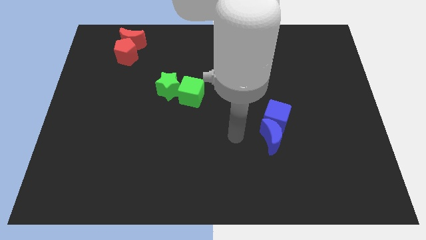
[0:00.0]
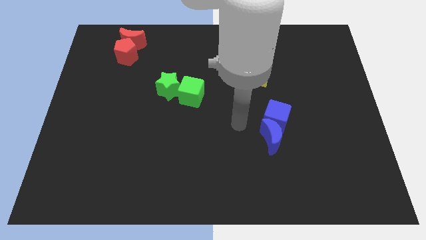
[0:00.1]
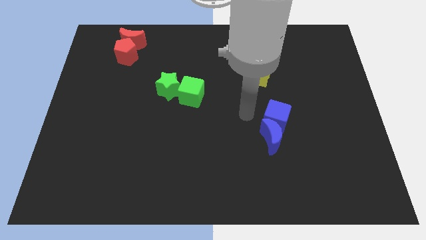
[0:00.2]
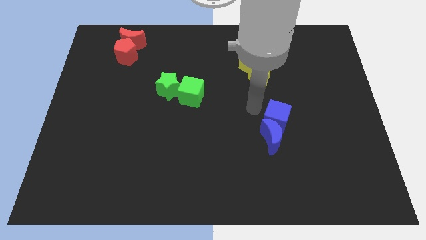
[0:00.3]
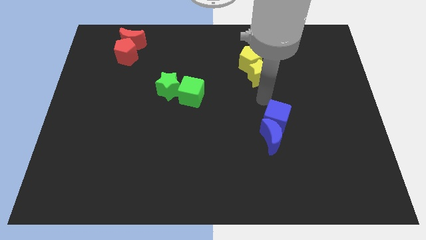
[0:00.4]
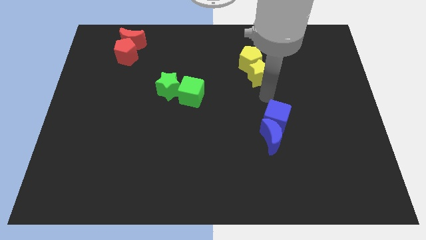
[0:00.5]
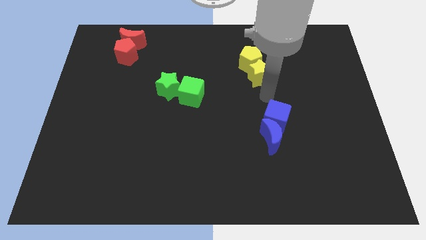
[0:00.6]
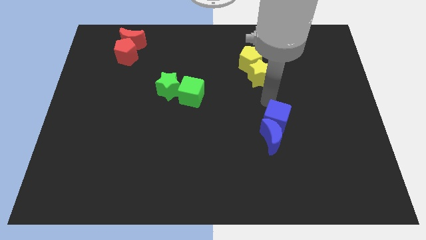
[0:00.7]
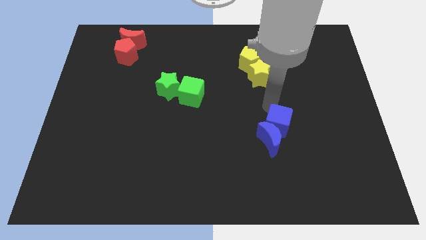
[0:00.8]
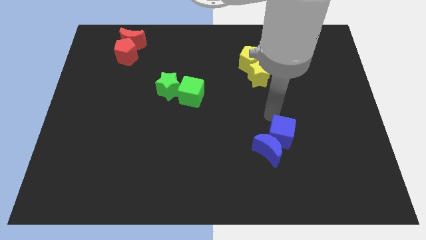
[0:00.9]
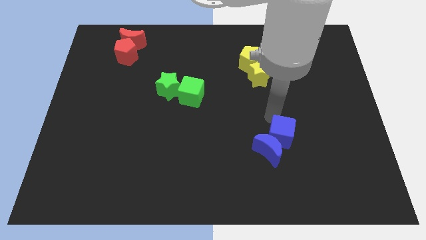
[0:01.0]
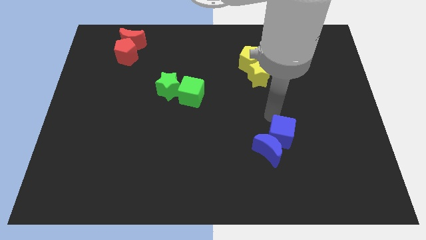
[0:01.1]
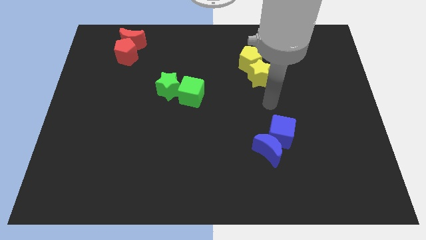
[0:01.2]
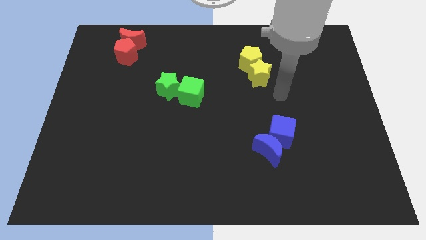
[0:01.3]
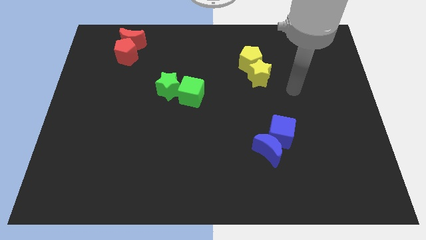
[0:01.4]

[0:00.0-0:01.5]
move the blue blocks towards the bottom

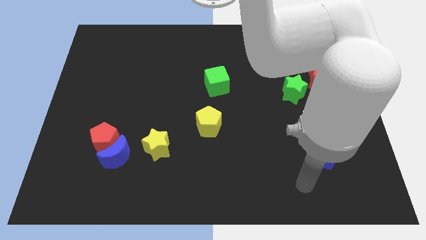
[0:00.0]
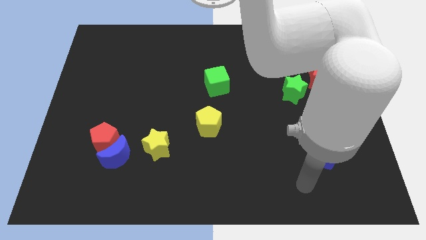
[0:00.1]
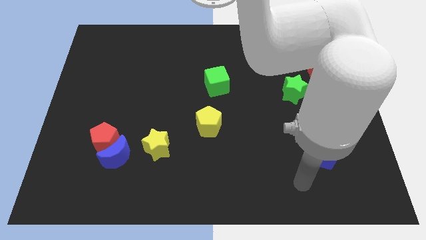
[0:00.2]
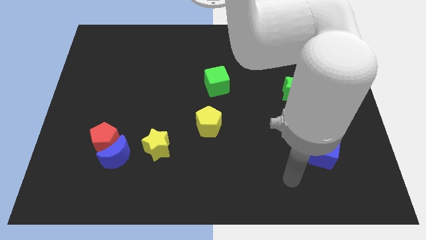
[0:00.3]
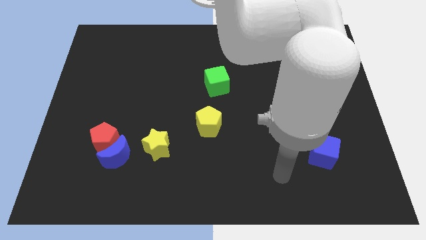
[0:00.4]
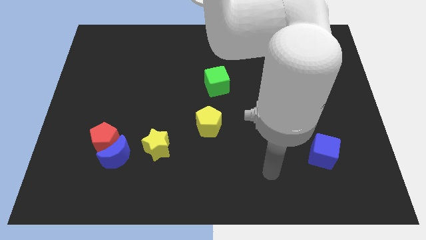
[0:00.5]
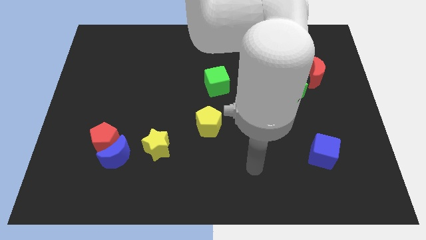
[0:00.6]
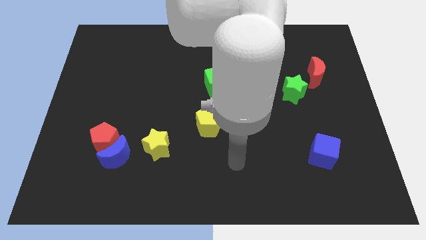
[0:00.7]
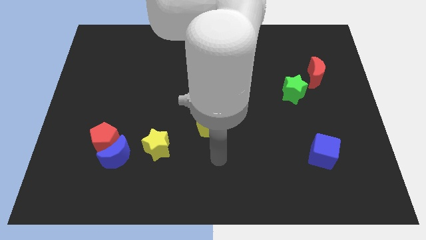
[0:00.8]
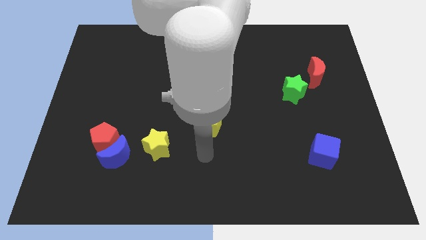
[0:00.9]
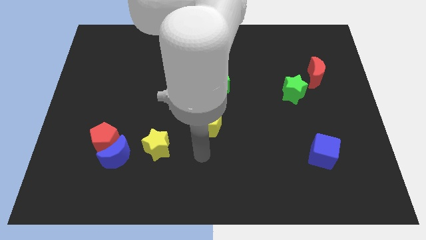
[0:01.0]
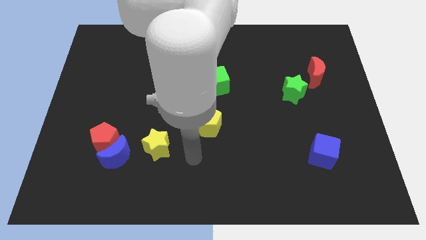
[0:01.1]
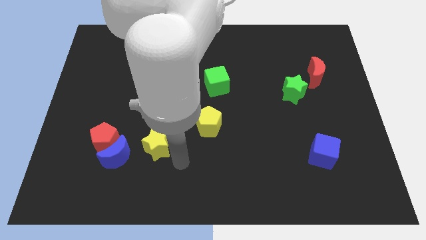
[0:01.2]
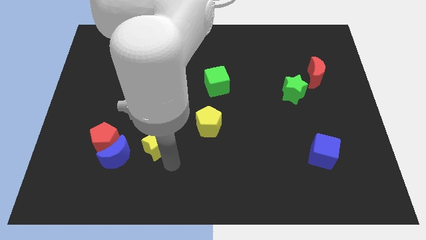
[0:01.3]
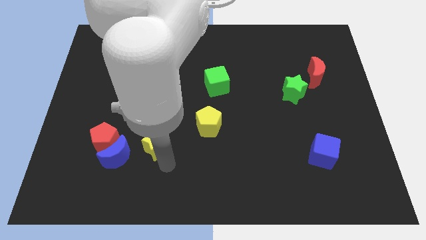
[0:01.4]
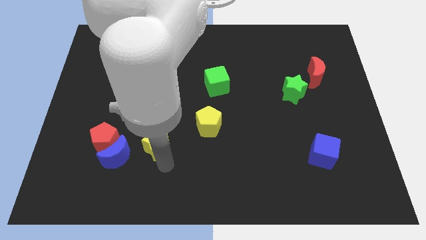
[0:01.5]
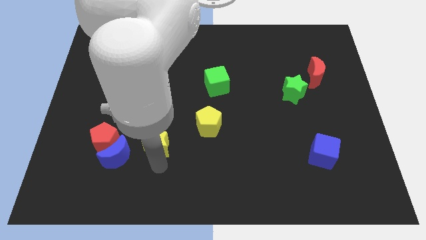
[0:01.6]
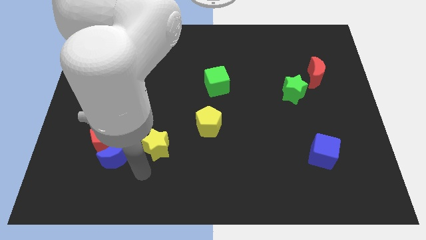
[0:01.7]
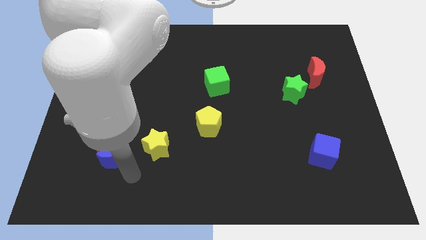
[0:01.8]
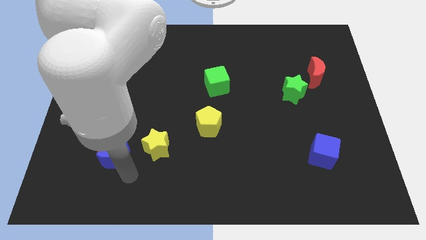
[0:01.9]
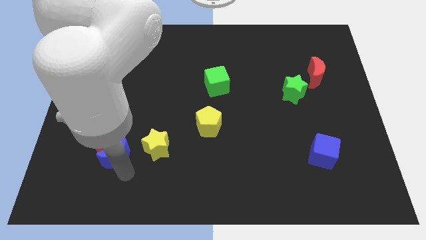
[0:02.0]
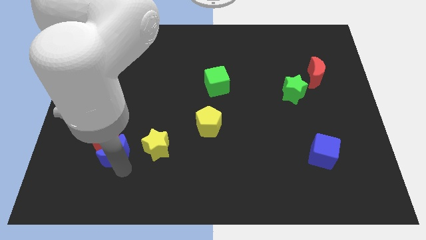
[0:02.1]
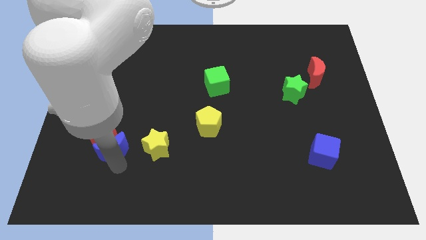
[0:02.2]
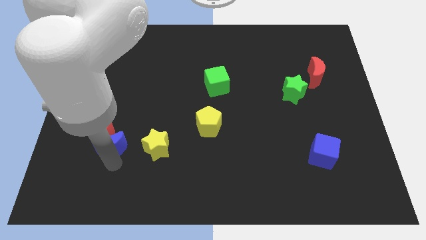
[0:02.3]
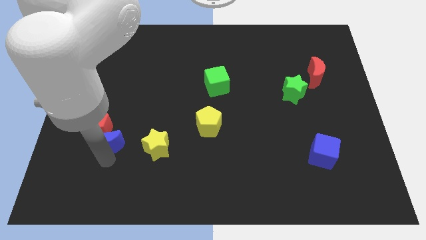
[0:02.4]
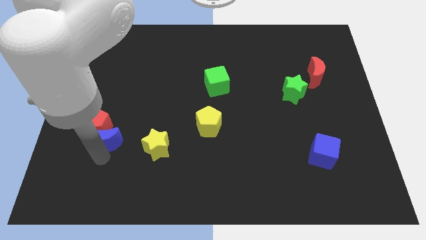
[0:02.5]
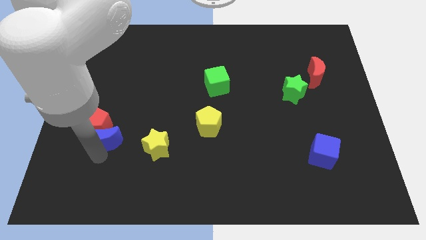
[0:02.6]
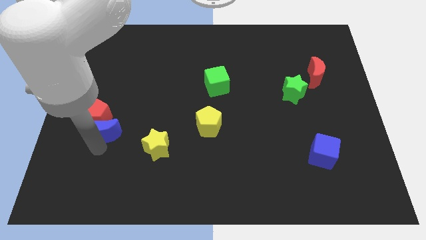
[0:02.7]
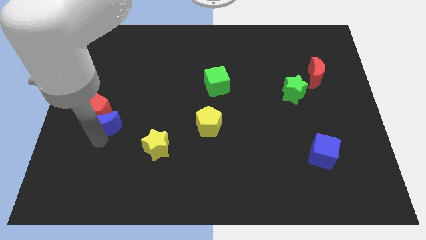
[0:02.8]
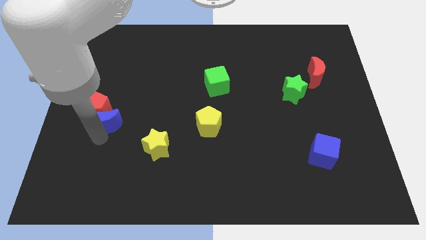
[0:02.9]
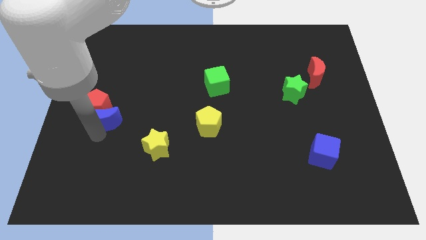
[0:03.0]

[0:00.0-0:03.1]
slide blue crescent and red pentagon towards the center left

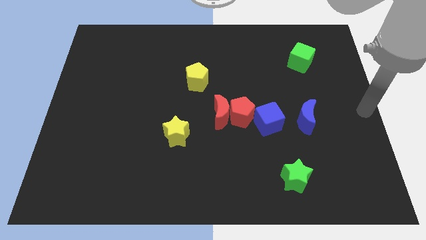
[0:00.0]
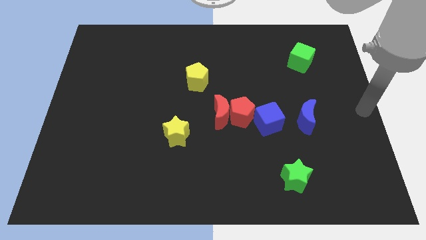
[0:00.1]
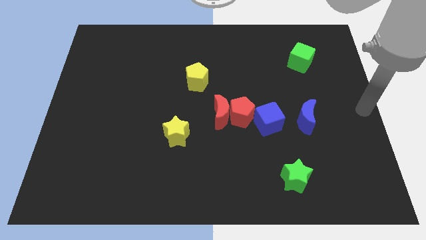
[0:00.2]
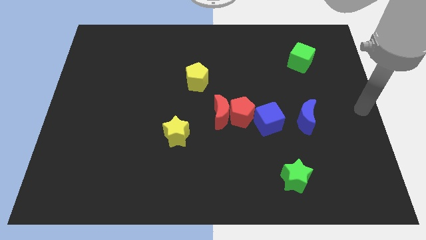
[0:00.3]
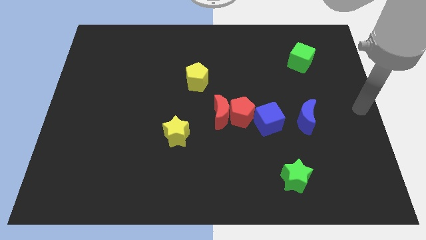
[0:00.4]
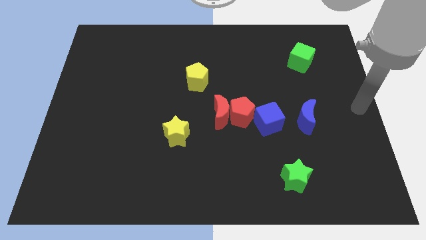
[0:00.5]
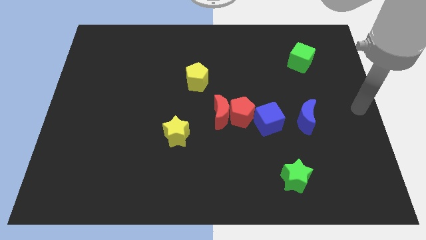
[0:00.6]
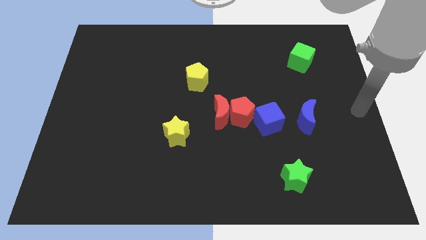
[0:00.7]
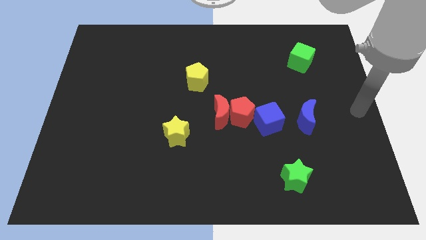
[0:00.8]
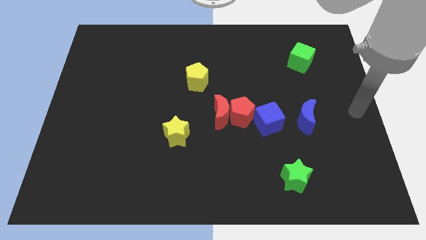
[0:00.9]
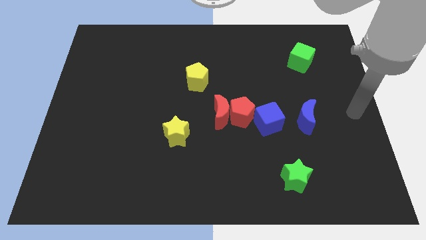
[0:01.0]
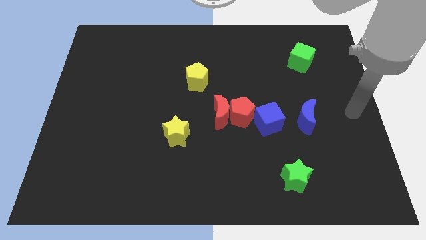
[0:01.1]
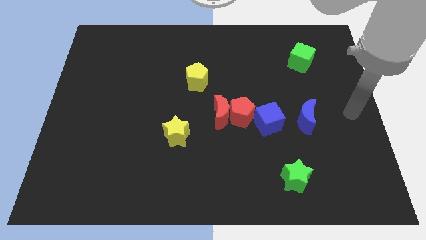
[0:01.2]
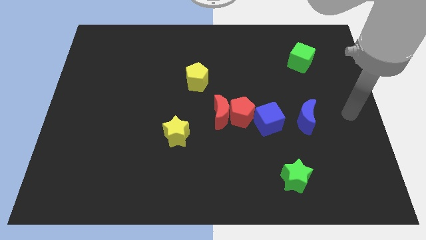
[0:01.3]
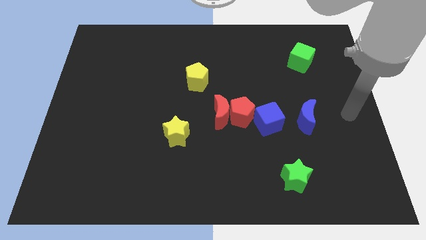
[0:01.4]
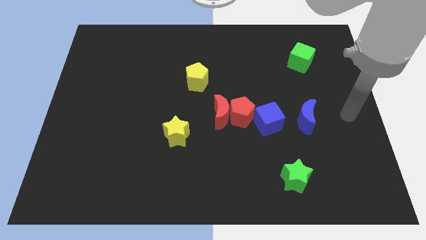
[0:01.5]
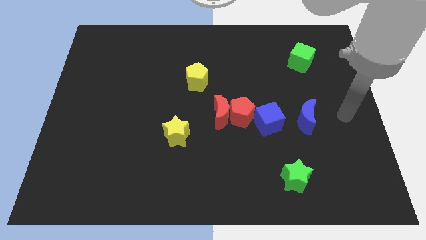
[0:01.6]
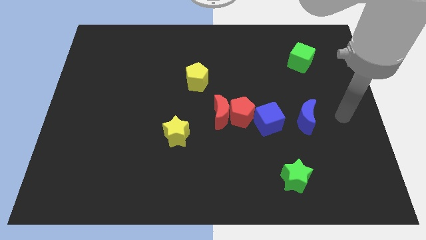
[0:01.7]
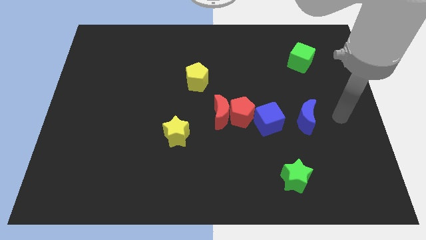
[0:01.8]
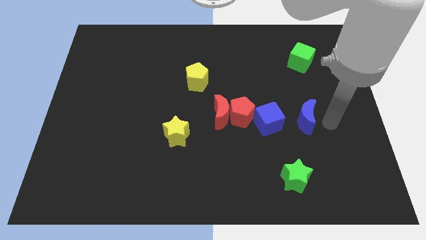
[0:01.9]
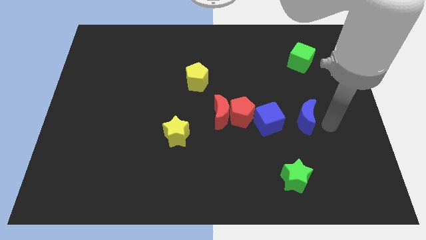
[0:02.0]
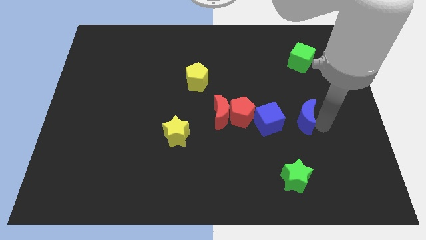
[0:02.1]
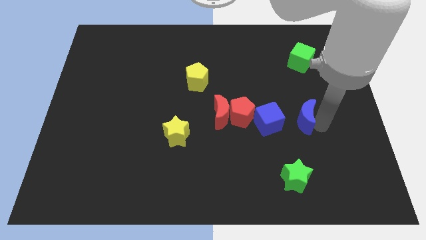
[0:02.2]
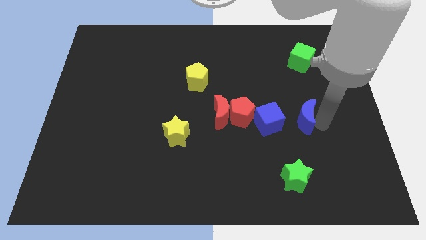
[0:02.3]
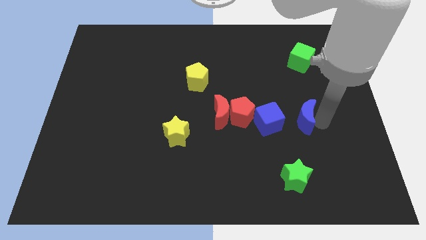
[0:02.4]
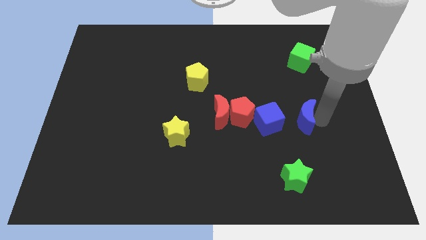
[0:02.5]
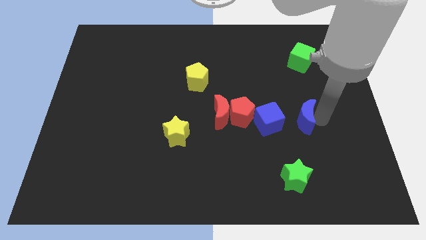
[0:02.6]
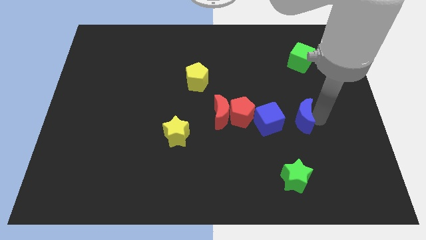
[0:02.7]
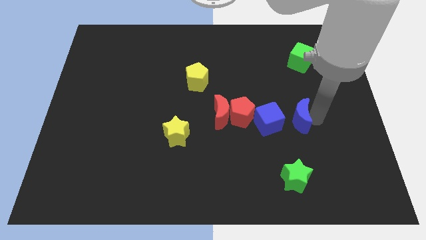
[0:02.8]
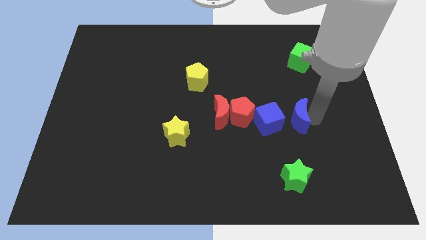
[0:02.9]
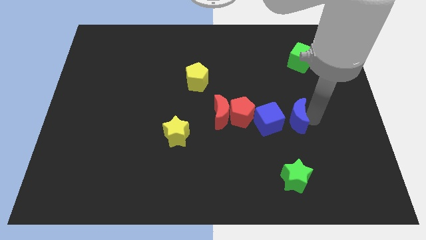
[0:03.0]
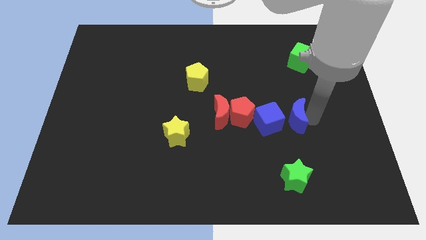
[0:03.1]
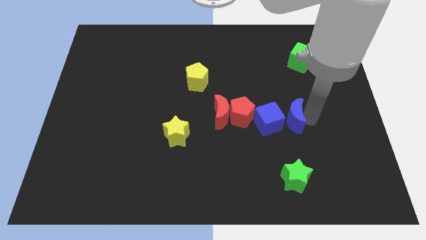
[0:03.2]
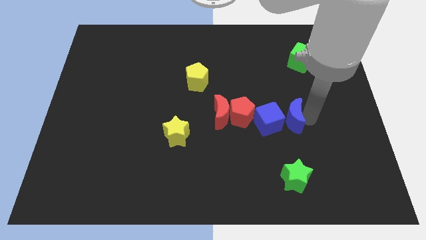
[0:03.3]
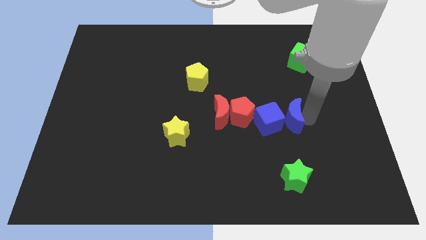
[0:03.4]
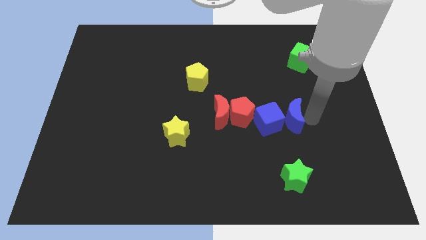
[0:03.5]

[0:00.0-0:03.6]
move the blue crescent close to the right of the blue cube

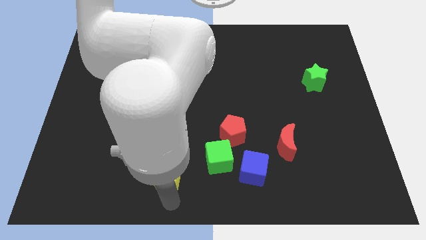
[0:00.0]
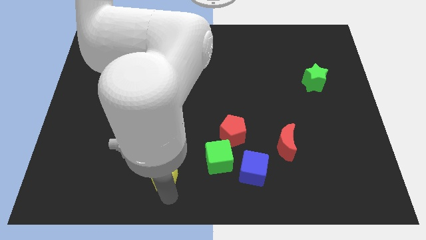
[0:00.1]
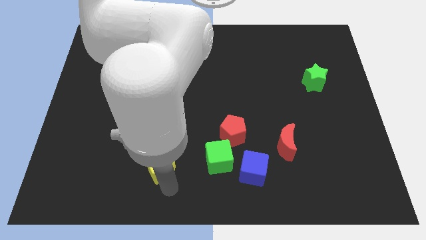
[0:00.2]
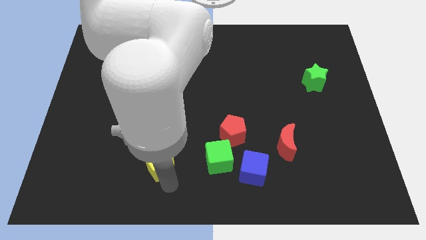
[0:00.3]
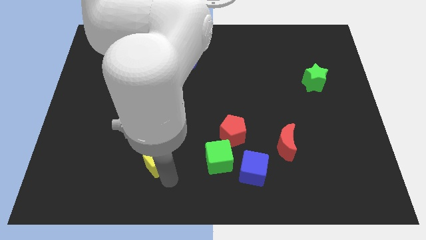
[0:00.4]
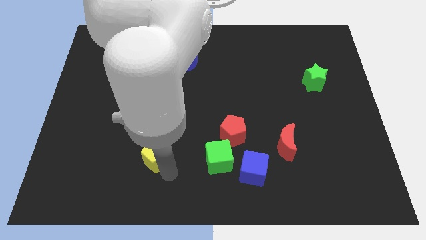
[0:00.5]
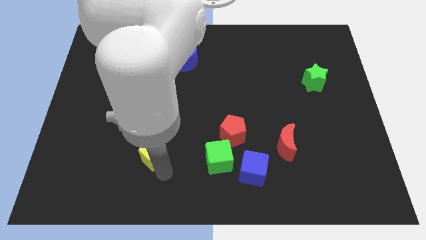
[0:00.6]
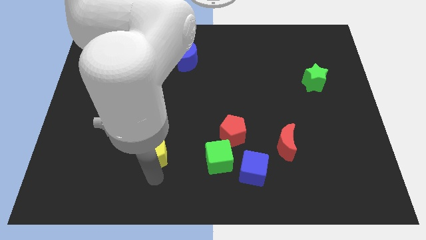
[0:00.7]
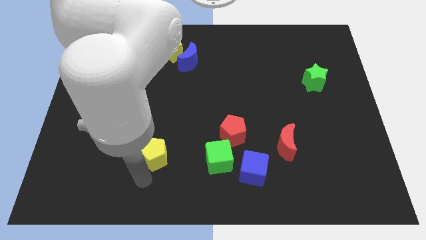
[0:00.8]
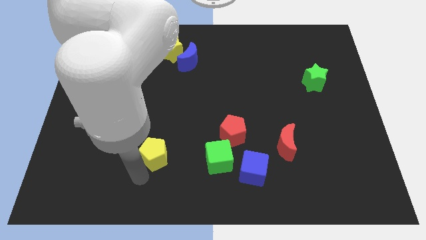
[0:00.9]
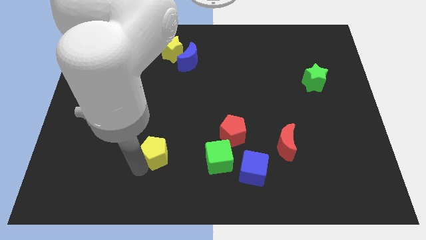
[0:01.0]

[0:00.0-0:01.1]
place yellow pentagon parallel to green cube
